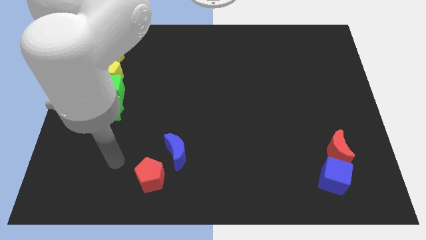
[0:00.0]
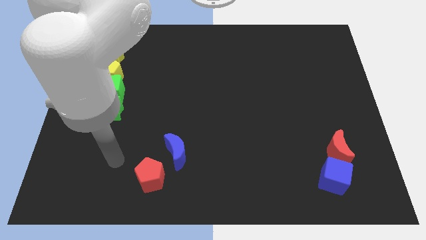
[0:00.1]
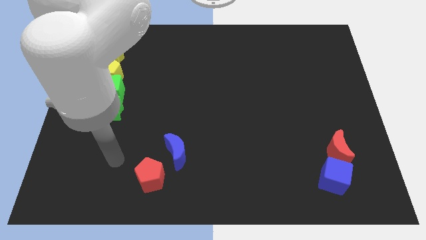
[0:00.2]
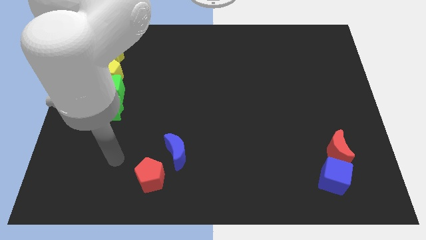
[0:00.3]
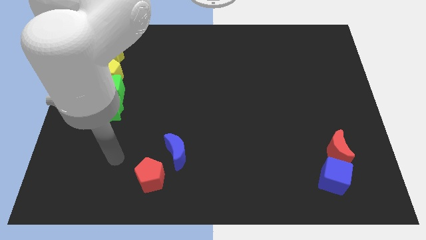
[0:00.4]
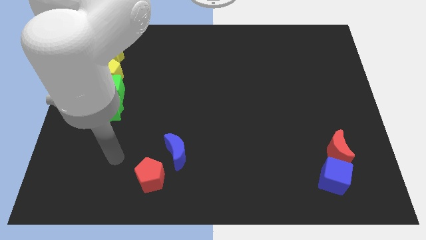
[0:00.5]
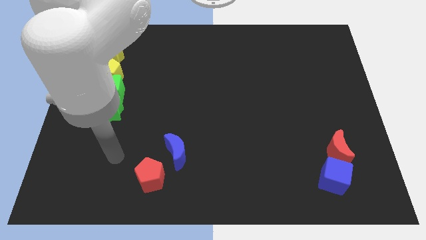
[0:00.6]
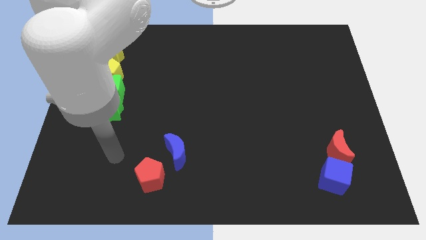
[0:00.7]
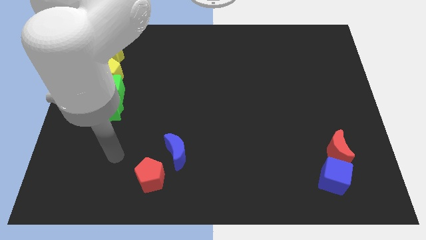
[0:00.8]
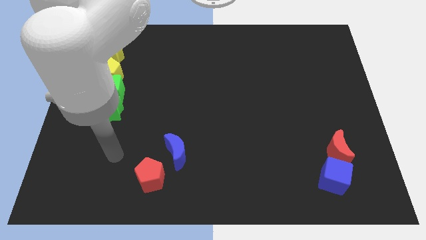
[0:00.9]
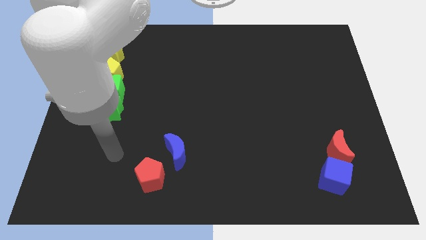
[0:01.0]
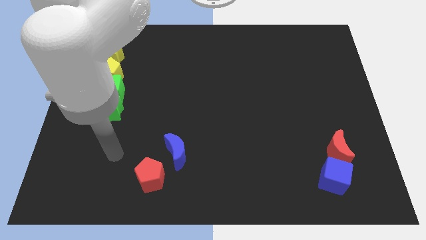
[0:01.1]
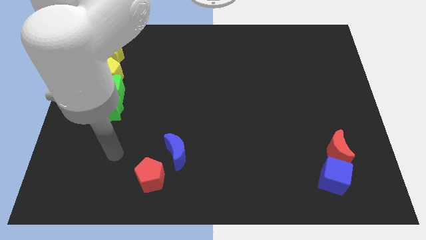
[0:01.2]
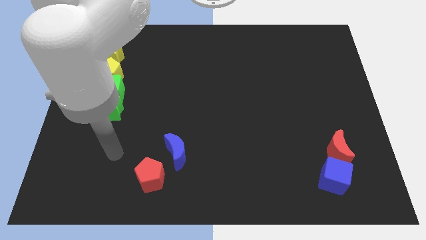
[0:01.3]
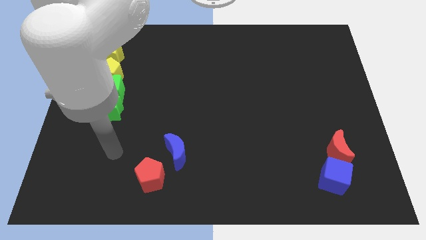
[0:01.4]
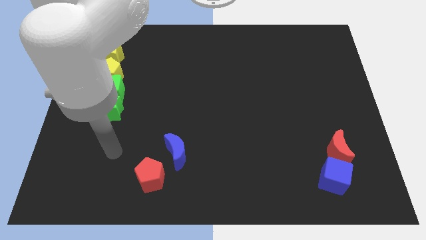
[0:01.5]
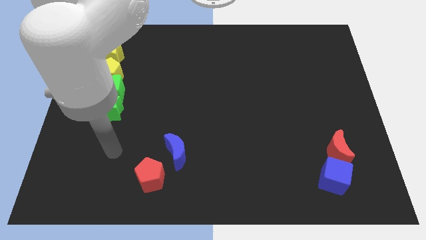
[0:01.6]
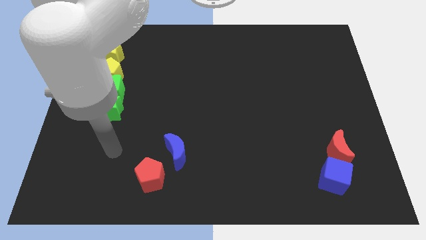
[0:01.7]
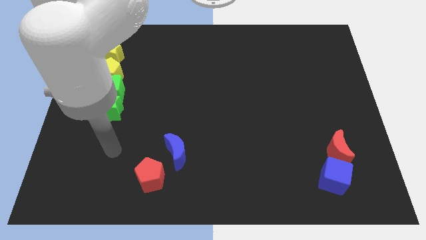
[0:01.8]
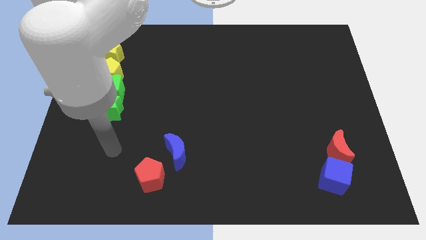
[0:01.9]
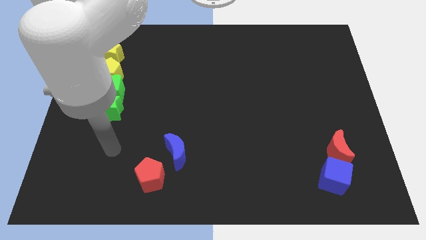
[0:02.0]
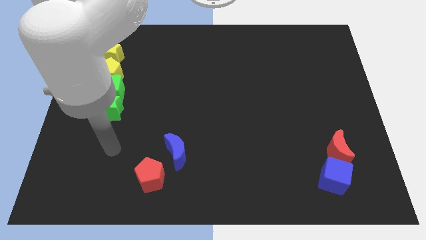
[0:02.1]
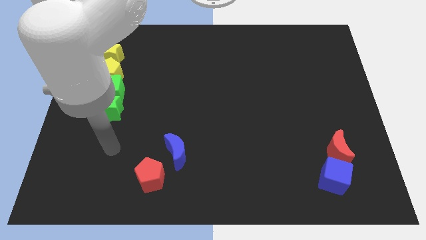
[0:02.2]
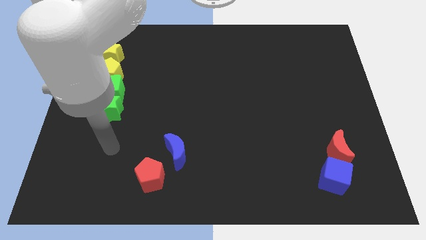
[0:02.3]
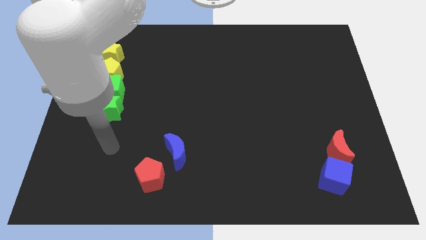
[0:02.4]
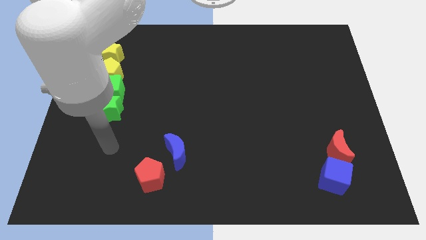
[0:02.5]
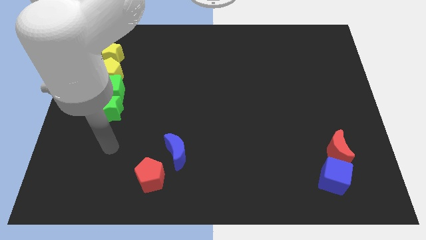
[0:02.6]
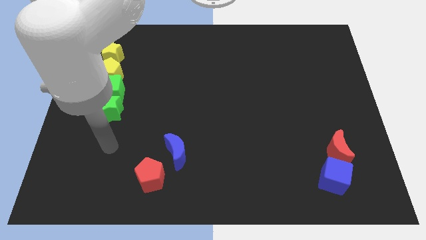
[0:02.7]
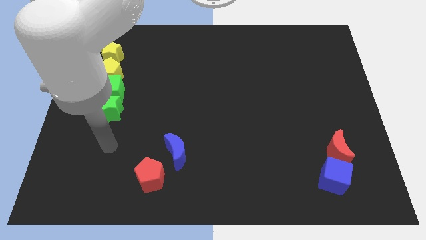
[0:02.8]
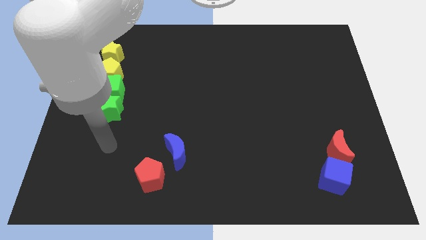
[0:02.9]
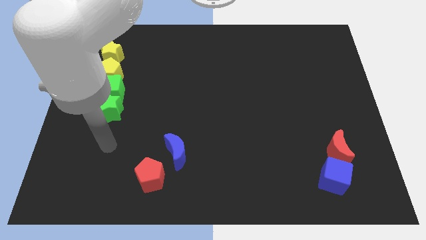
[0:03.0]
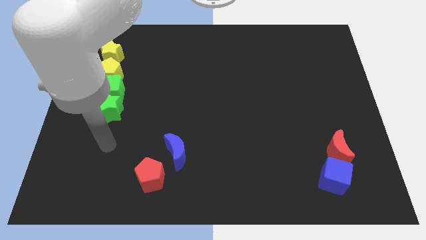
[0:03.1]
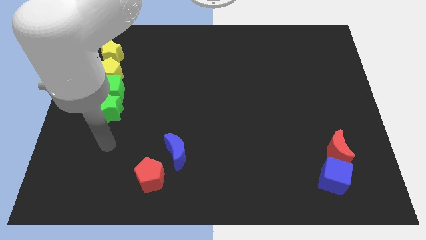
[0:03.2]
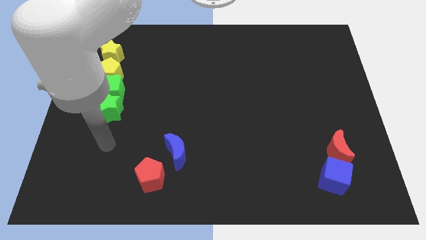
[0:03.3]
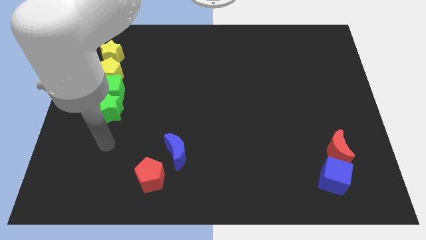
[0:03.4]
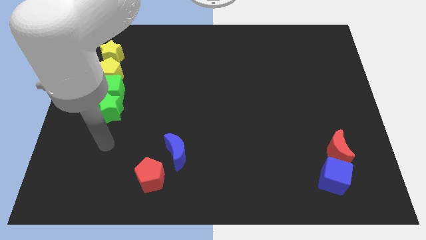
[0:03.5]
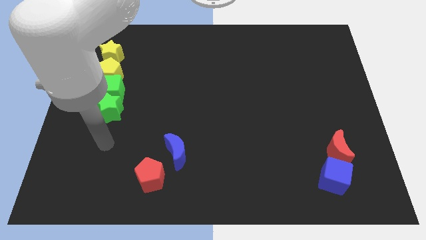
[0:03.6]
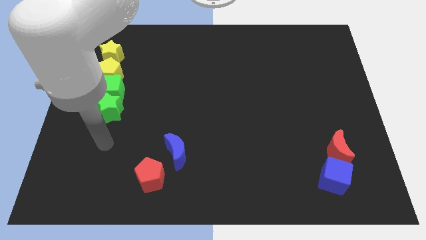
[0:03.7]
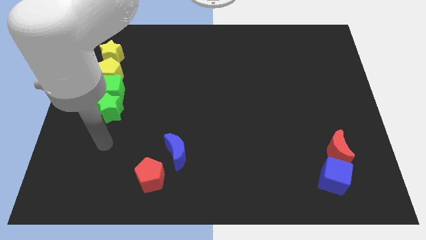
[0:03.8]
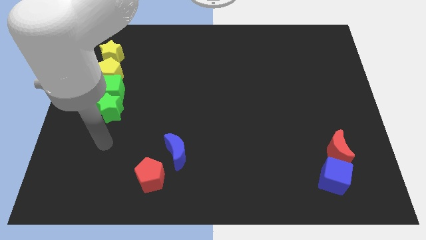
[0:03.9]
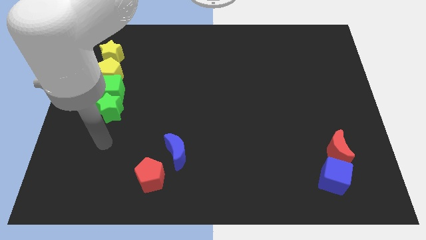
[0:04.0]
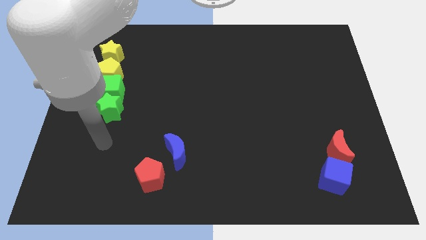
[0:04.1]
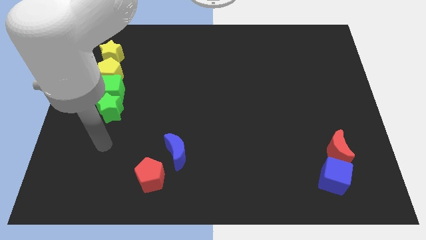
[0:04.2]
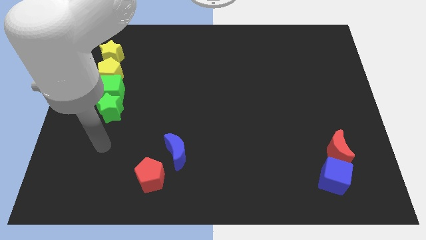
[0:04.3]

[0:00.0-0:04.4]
move your arm to the bottom of the green star

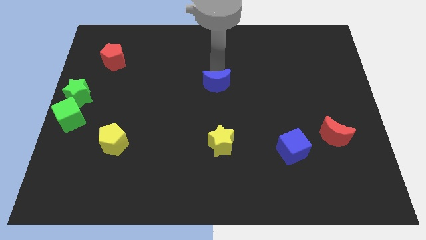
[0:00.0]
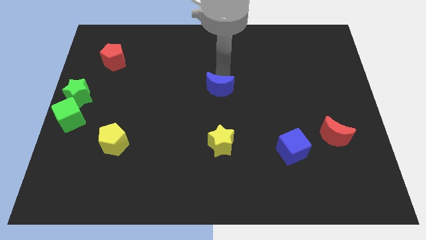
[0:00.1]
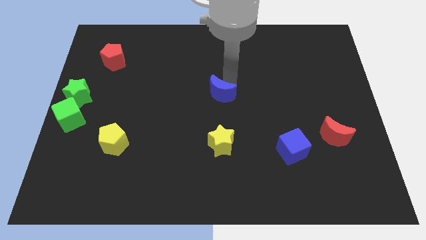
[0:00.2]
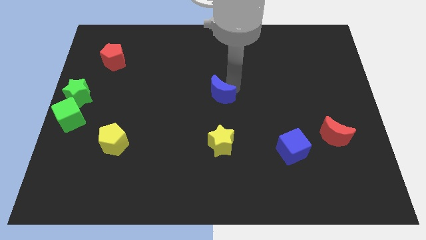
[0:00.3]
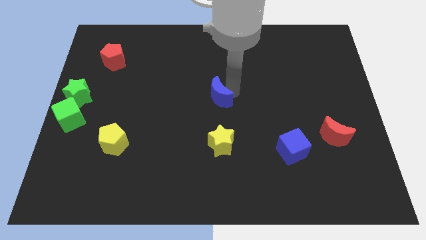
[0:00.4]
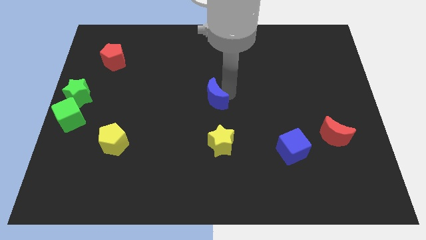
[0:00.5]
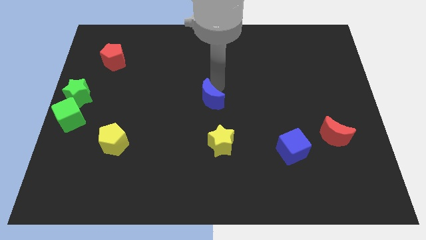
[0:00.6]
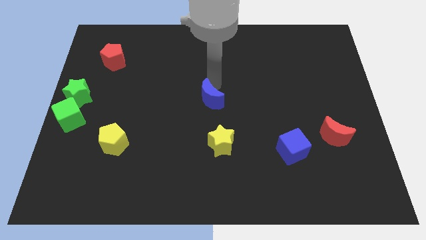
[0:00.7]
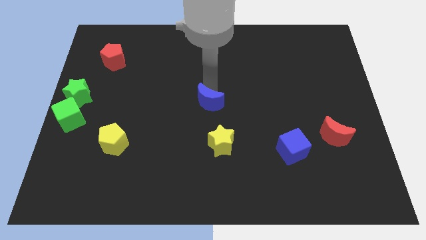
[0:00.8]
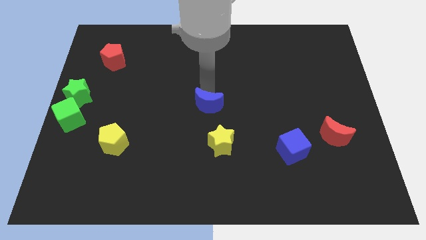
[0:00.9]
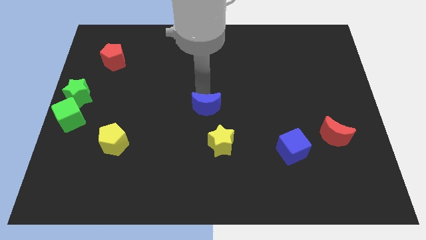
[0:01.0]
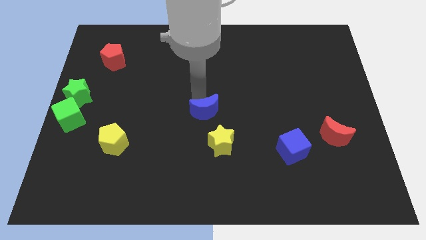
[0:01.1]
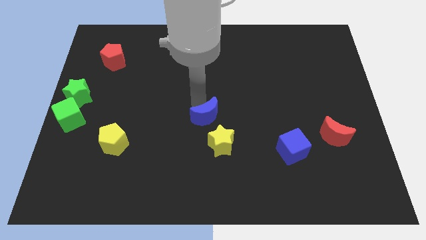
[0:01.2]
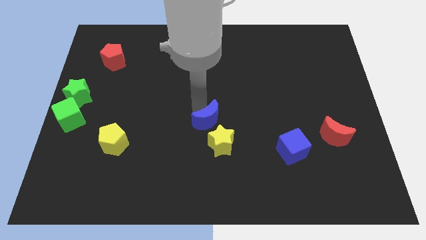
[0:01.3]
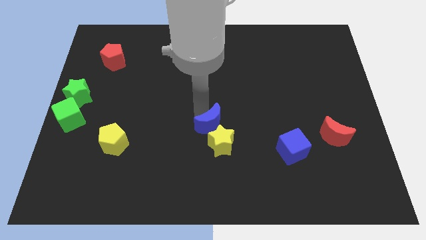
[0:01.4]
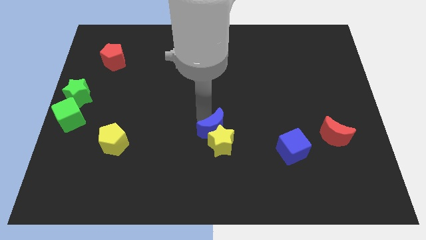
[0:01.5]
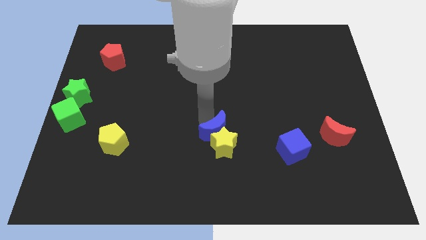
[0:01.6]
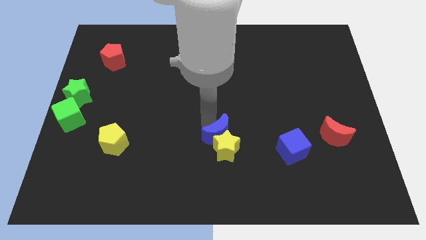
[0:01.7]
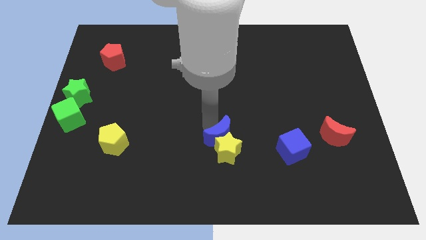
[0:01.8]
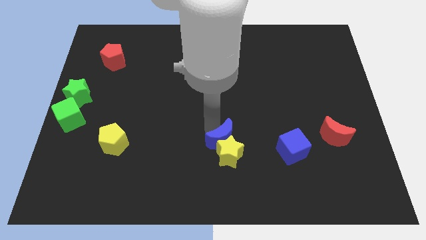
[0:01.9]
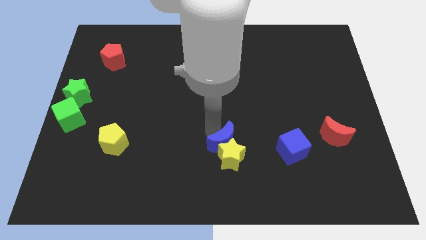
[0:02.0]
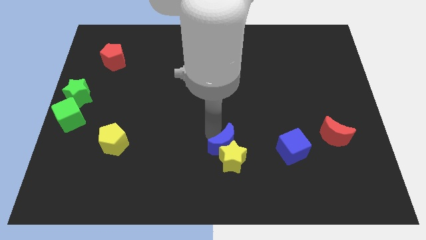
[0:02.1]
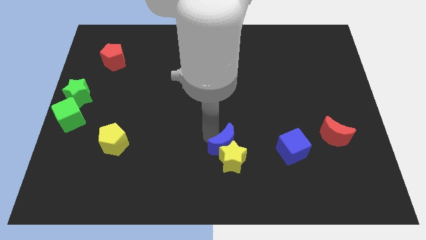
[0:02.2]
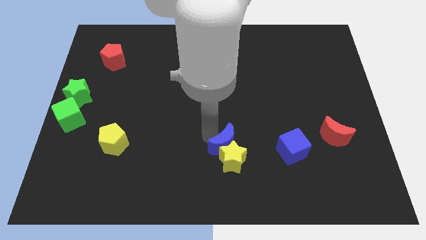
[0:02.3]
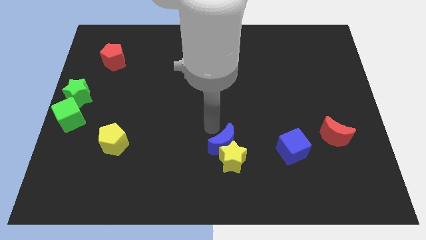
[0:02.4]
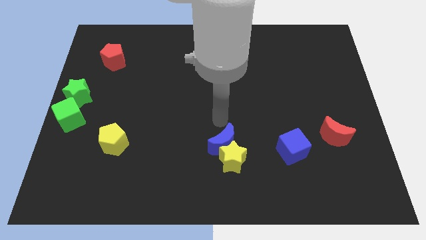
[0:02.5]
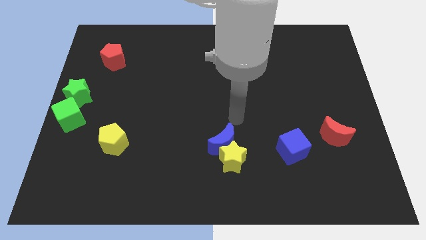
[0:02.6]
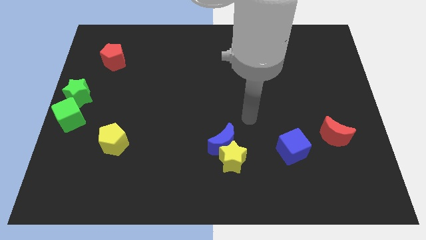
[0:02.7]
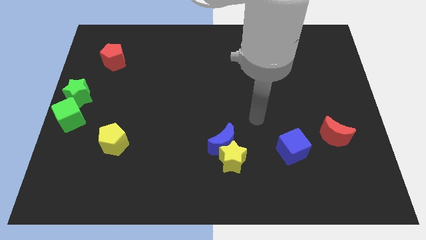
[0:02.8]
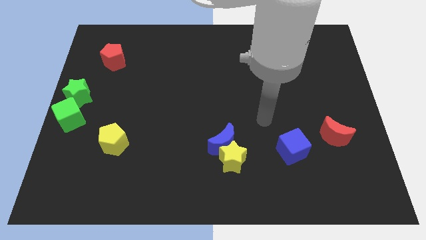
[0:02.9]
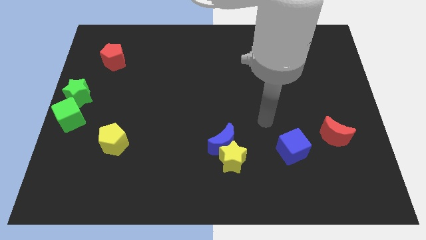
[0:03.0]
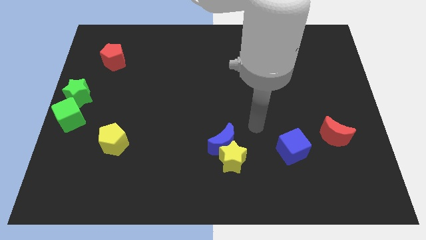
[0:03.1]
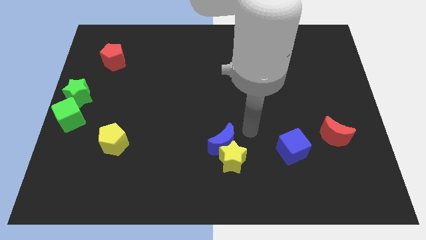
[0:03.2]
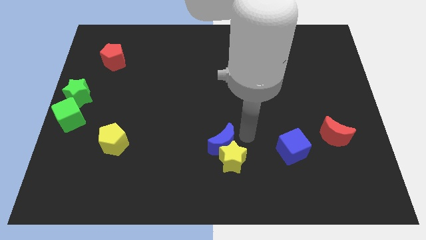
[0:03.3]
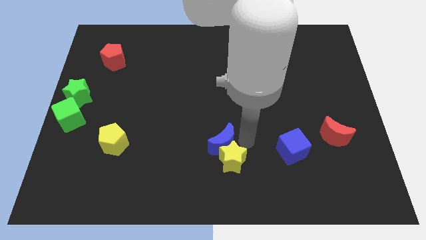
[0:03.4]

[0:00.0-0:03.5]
move blue crescent into the yellow star

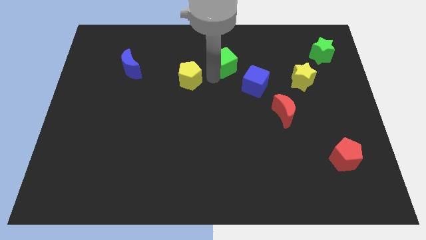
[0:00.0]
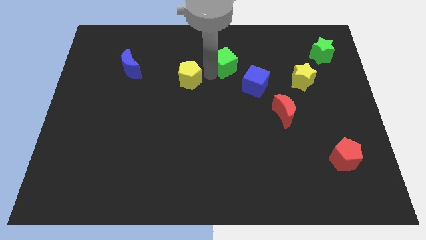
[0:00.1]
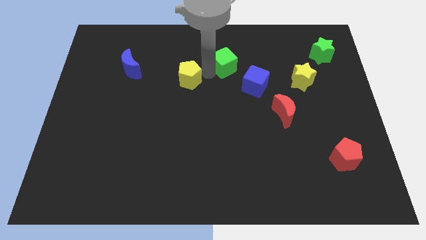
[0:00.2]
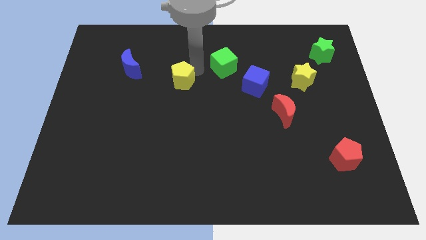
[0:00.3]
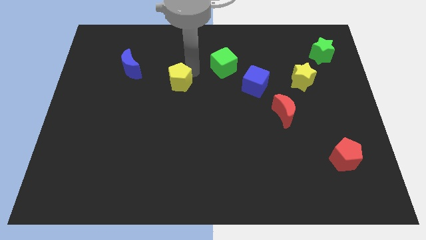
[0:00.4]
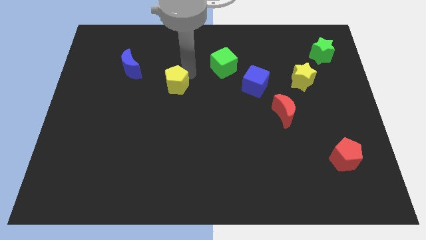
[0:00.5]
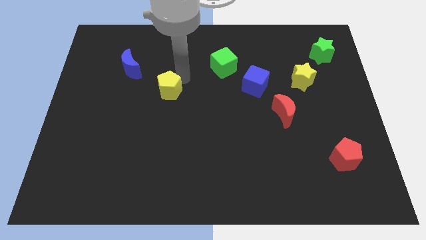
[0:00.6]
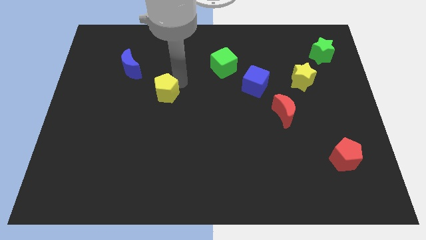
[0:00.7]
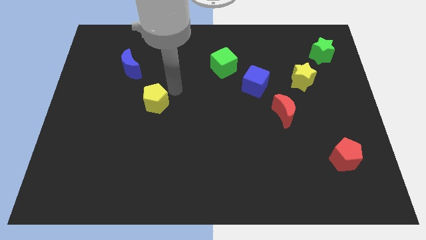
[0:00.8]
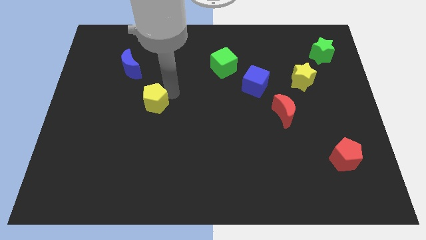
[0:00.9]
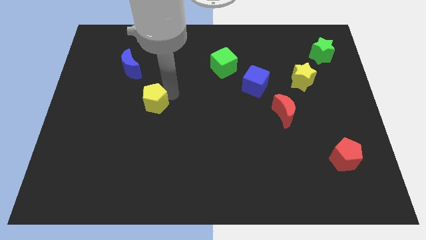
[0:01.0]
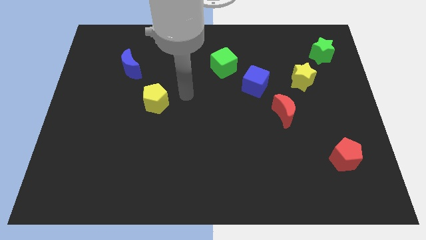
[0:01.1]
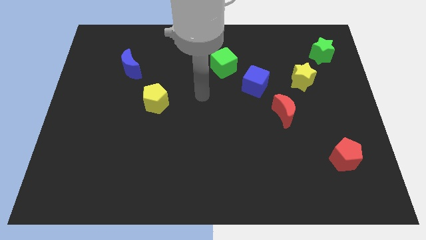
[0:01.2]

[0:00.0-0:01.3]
put the yellow pentagon diagonally at the bottom right of the blue crescent
